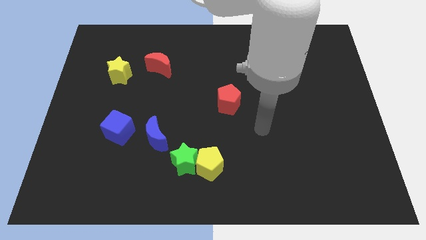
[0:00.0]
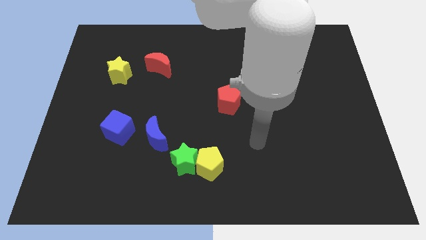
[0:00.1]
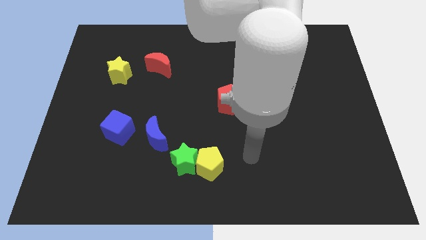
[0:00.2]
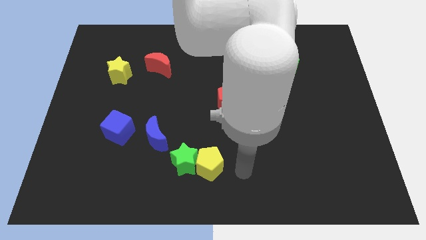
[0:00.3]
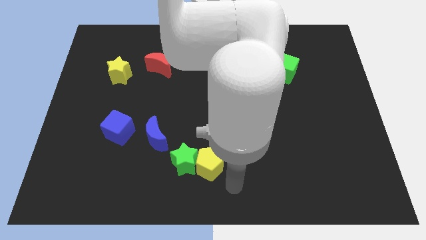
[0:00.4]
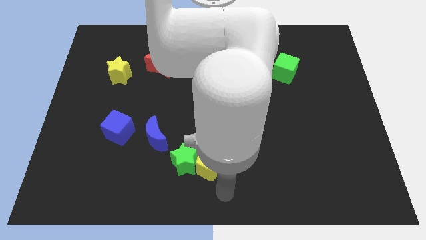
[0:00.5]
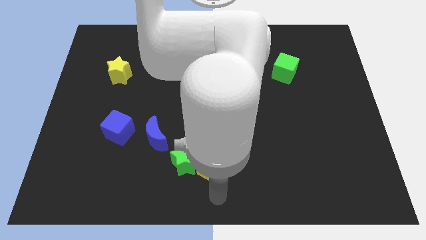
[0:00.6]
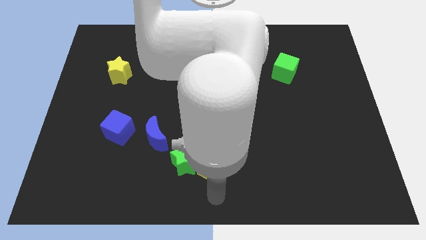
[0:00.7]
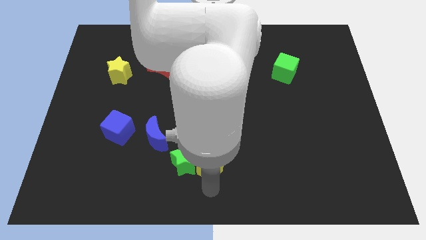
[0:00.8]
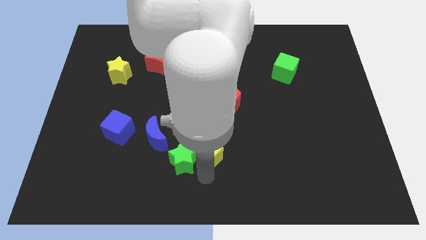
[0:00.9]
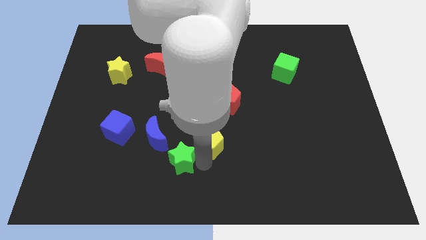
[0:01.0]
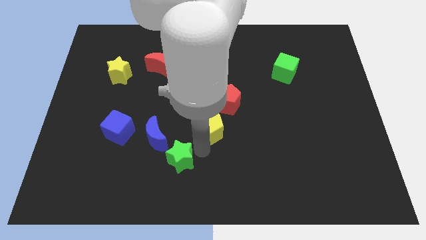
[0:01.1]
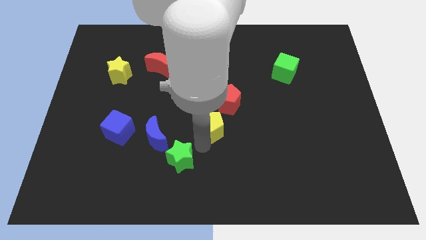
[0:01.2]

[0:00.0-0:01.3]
move the yellow pentagon to the center of the board

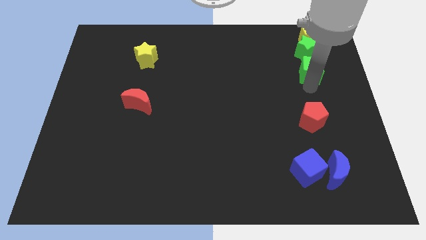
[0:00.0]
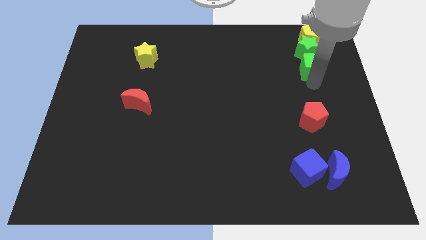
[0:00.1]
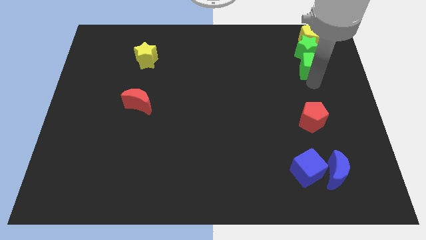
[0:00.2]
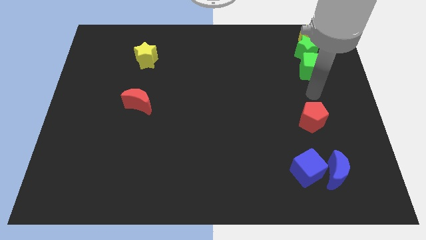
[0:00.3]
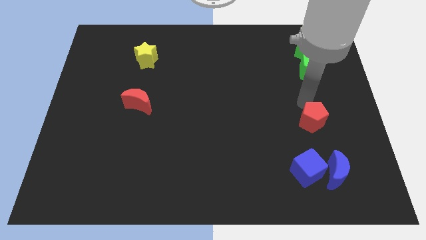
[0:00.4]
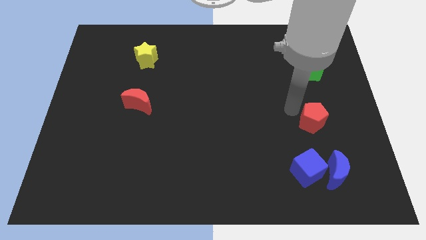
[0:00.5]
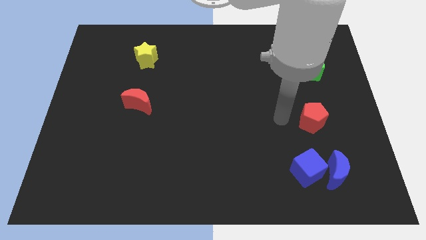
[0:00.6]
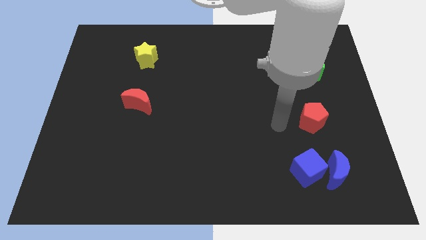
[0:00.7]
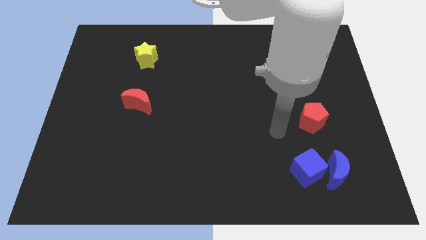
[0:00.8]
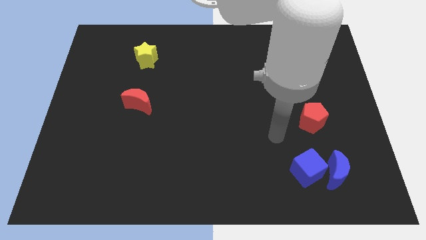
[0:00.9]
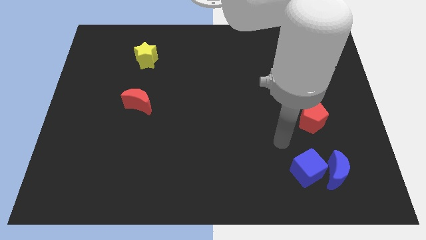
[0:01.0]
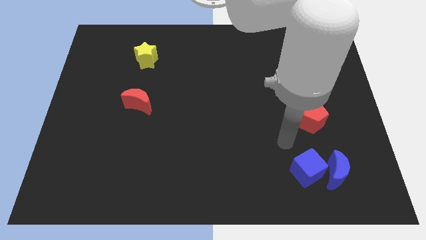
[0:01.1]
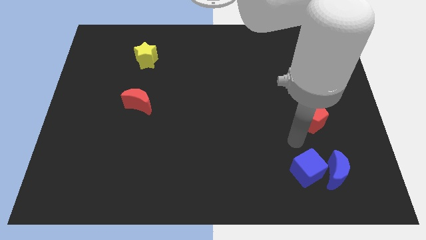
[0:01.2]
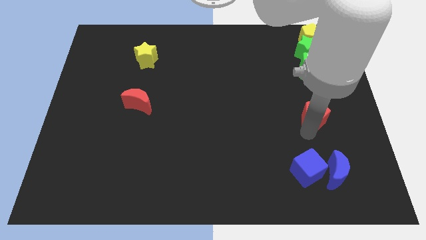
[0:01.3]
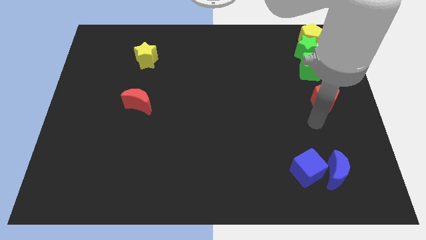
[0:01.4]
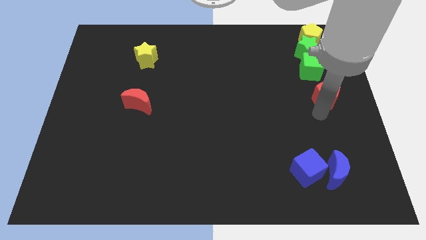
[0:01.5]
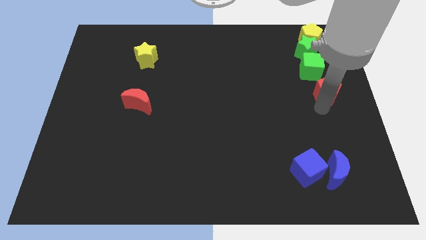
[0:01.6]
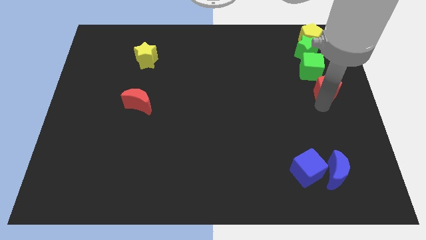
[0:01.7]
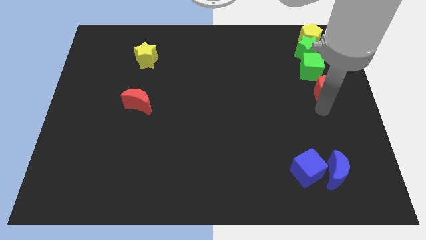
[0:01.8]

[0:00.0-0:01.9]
push the red pentagon towards the bottom right side of the green cube

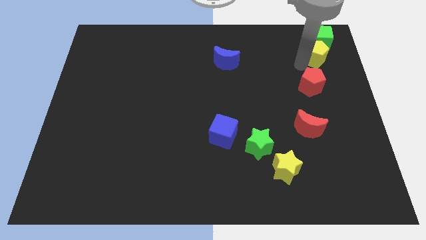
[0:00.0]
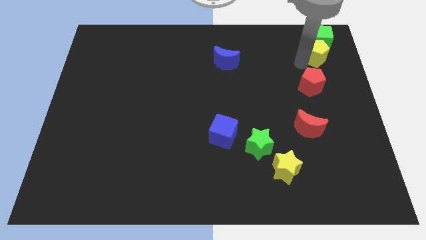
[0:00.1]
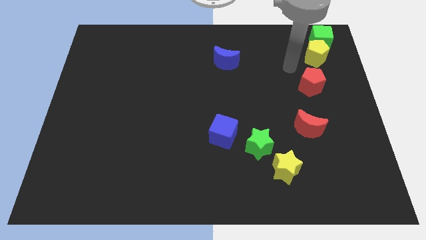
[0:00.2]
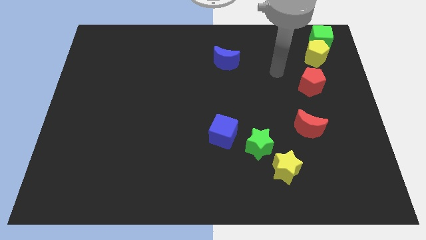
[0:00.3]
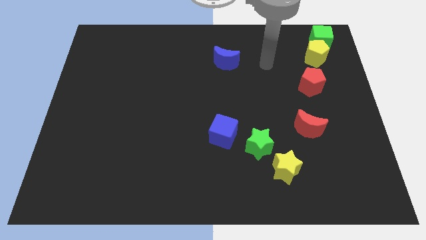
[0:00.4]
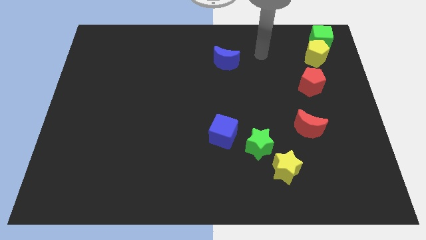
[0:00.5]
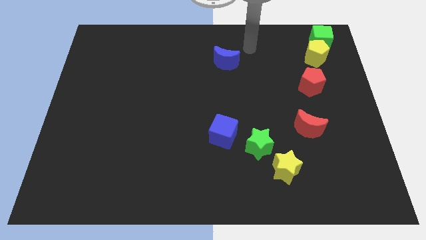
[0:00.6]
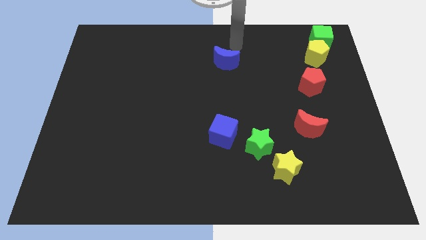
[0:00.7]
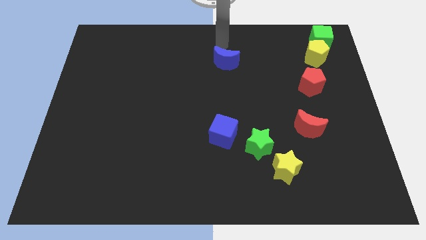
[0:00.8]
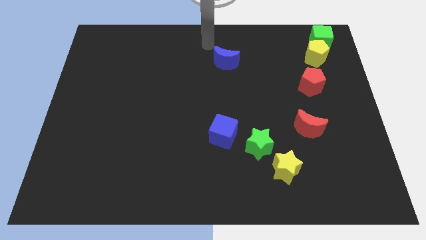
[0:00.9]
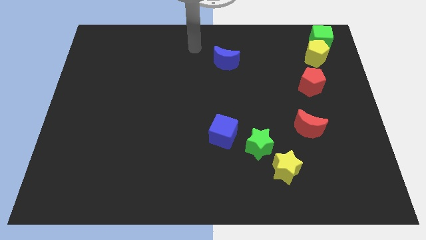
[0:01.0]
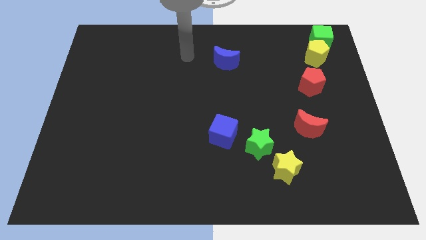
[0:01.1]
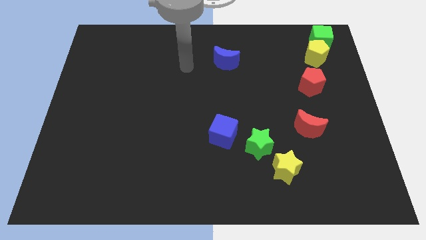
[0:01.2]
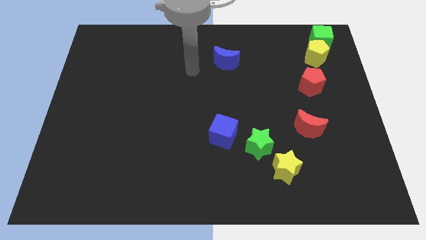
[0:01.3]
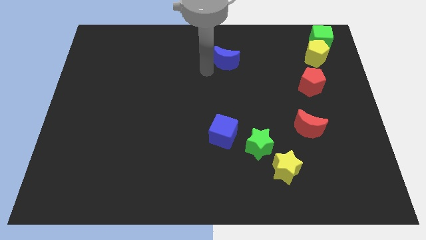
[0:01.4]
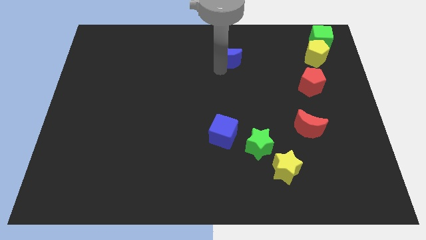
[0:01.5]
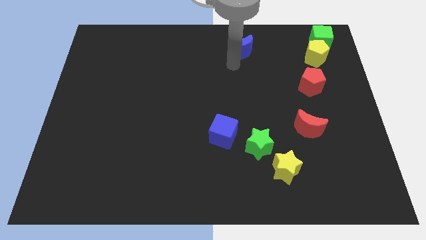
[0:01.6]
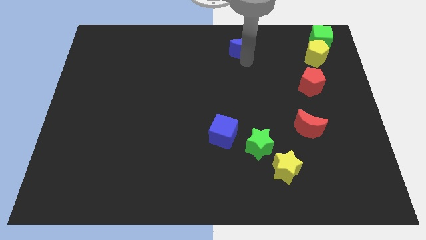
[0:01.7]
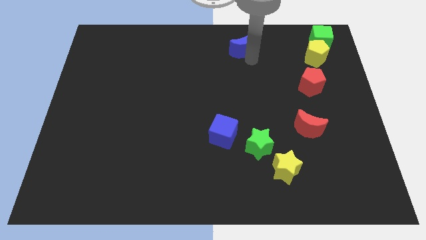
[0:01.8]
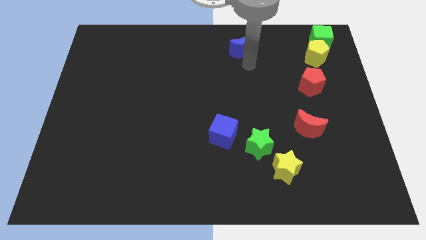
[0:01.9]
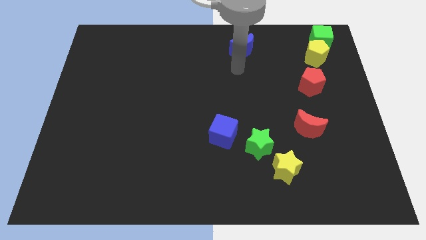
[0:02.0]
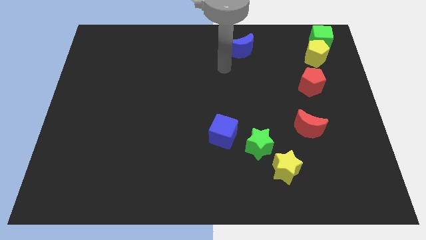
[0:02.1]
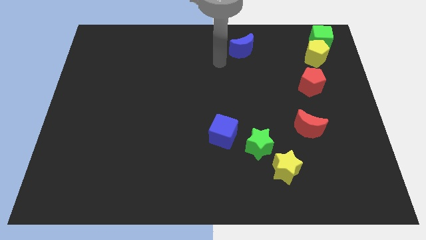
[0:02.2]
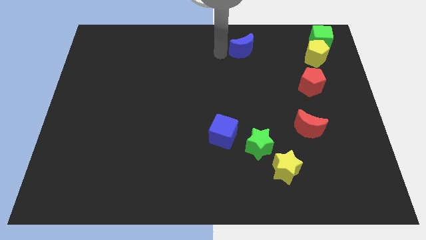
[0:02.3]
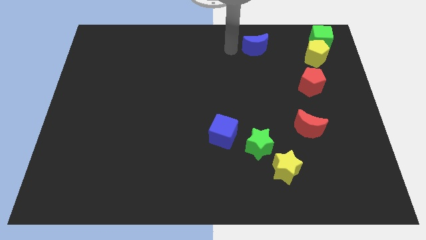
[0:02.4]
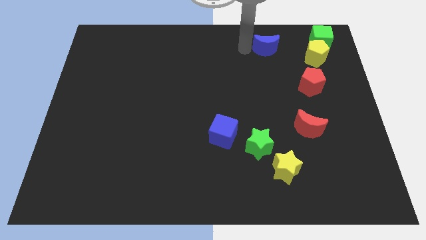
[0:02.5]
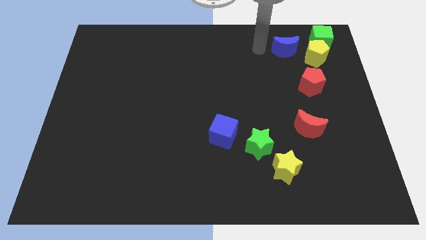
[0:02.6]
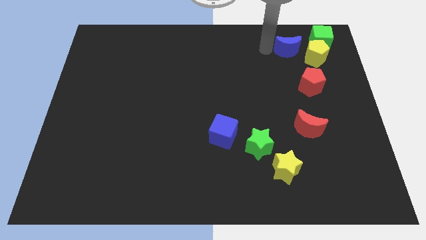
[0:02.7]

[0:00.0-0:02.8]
place the blue moon left to the yellow pentagon

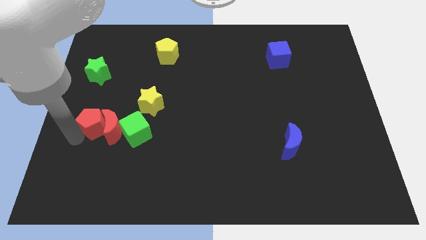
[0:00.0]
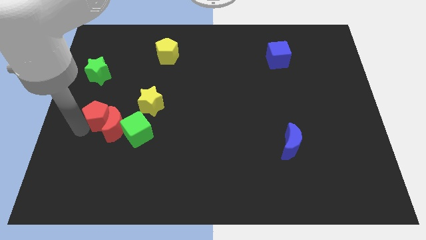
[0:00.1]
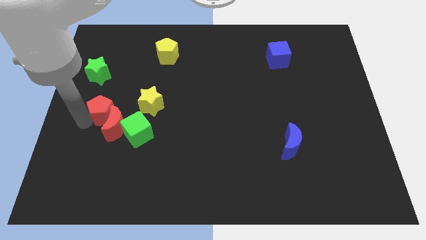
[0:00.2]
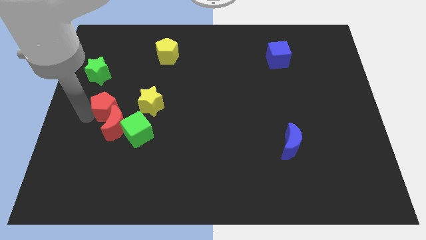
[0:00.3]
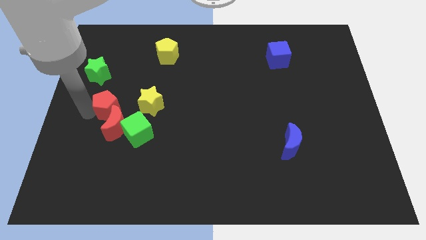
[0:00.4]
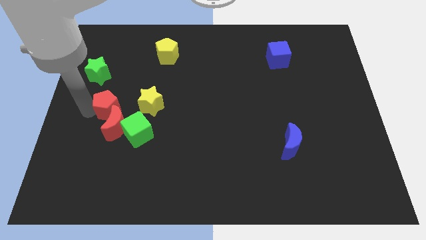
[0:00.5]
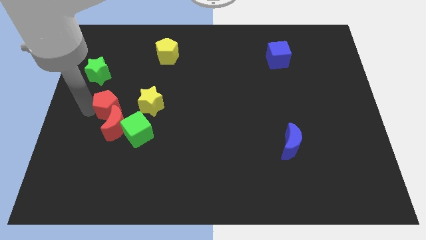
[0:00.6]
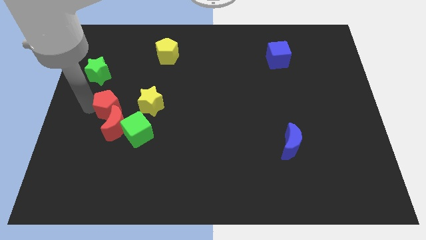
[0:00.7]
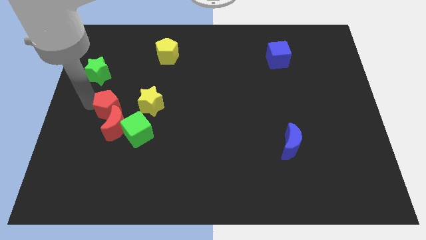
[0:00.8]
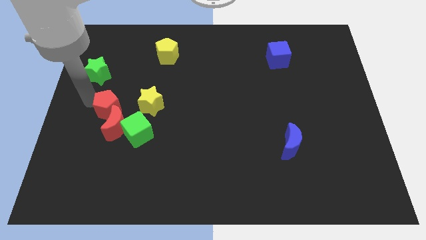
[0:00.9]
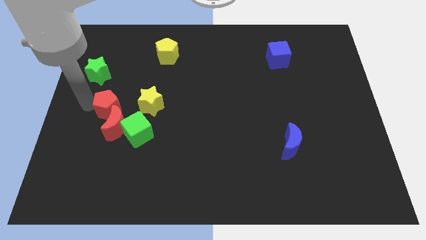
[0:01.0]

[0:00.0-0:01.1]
push red pentagon up to the left of yellow star

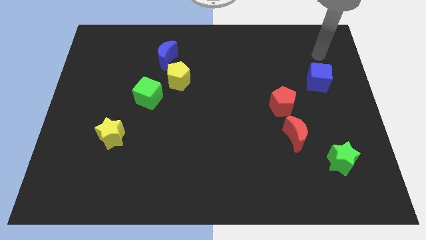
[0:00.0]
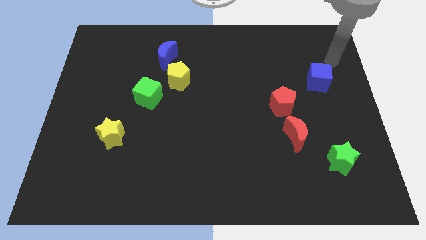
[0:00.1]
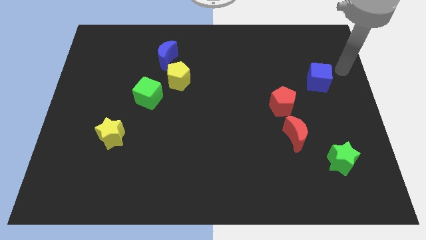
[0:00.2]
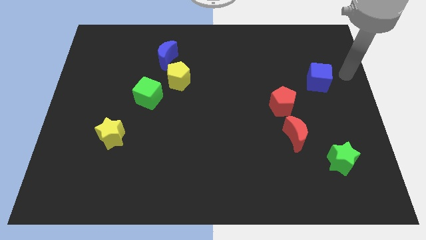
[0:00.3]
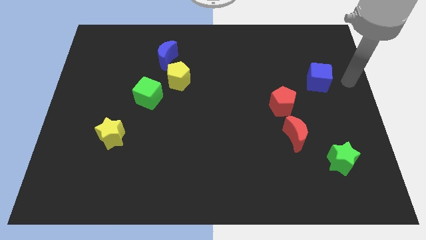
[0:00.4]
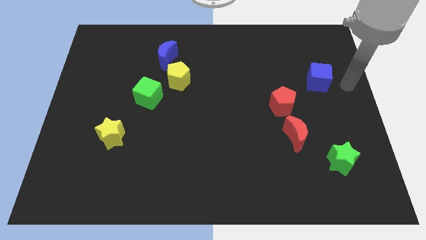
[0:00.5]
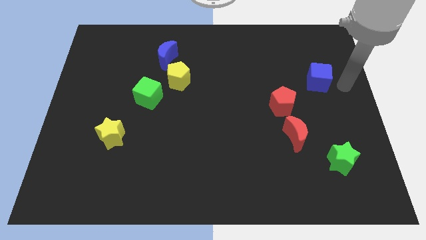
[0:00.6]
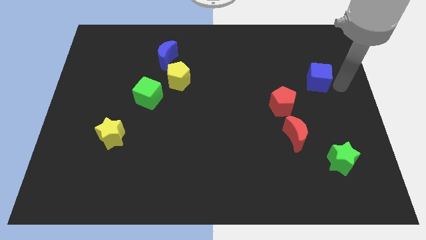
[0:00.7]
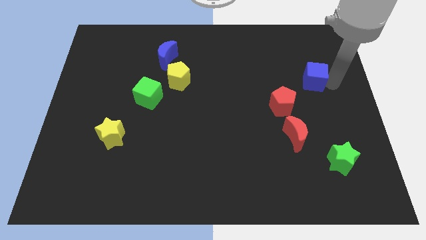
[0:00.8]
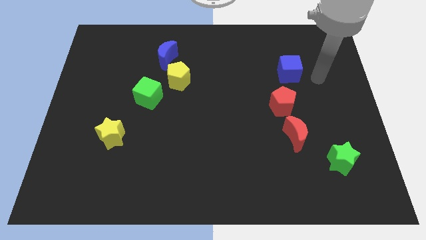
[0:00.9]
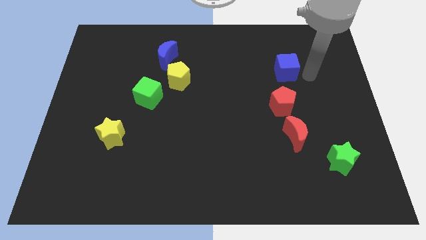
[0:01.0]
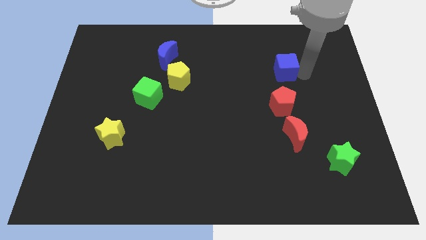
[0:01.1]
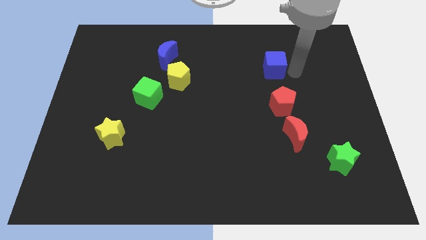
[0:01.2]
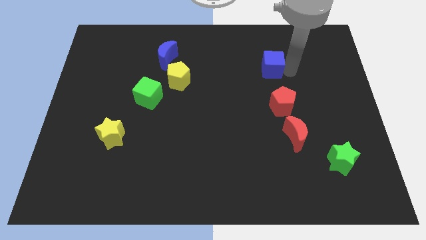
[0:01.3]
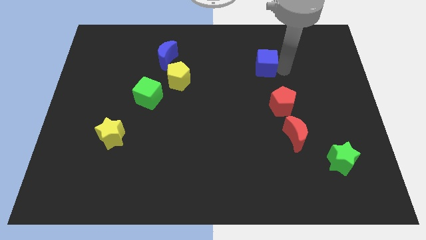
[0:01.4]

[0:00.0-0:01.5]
move the blue cube above the red pentagon

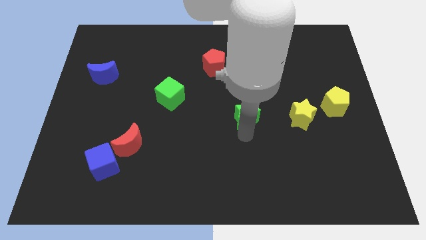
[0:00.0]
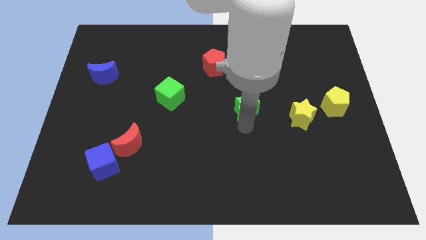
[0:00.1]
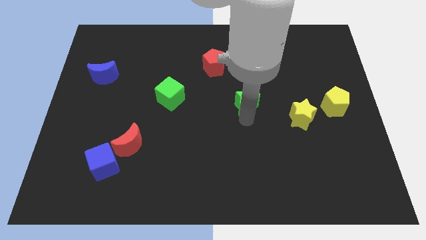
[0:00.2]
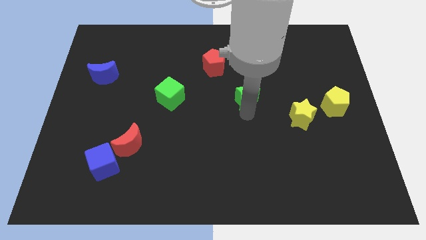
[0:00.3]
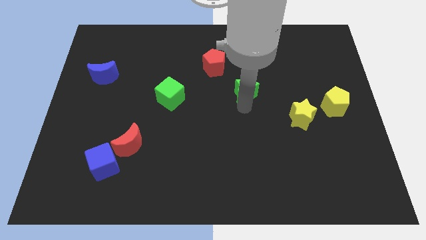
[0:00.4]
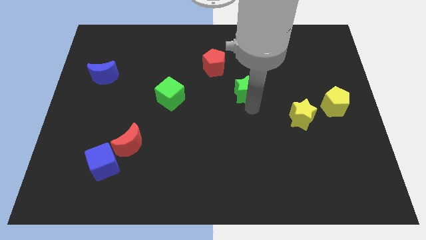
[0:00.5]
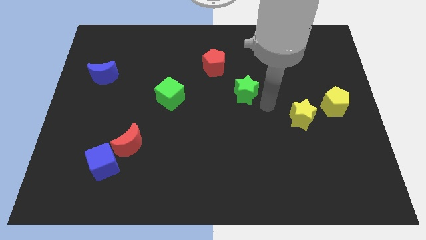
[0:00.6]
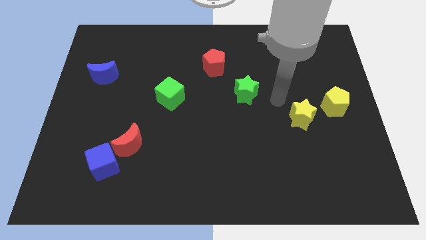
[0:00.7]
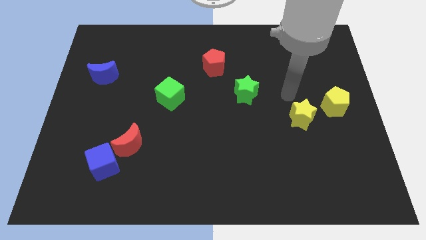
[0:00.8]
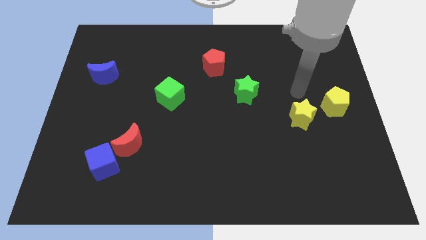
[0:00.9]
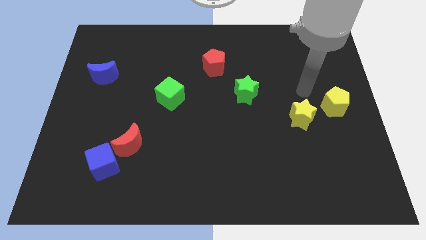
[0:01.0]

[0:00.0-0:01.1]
place the green star below the red pentagon
